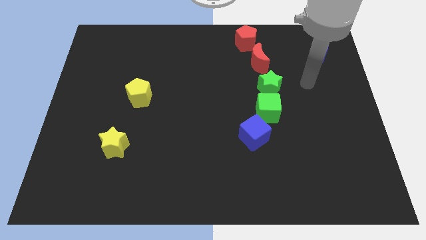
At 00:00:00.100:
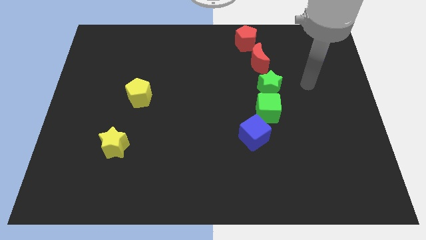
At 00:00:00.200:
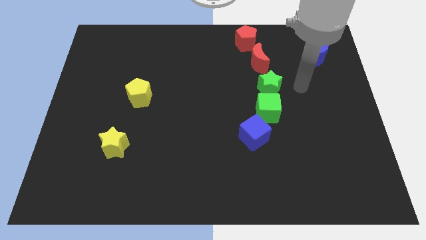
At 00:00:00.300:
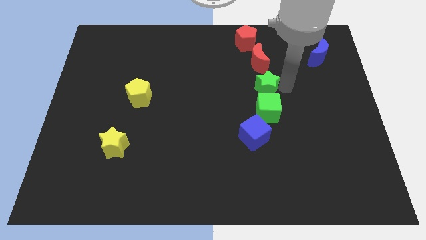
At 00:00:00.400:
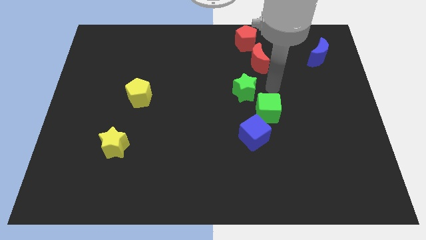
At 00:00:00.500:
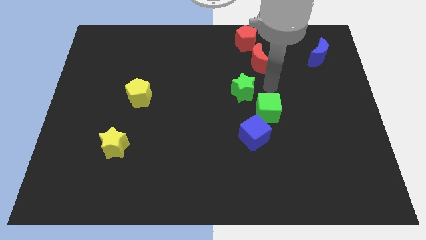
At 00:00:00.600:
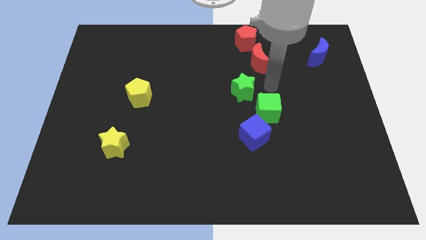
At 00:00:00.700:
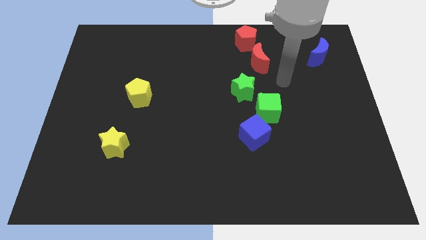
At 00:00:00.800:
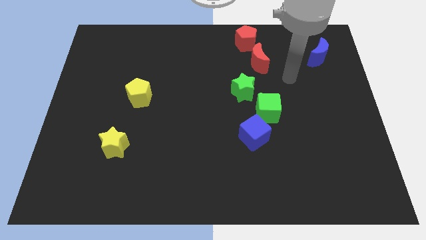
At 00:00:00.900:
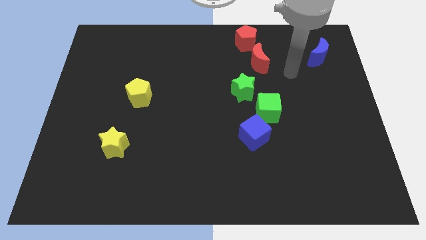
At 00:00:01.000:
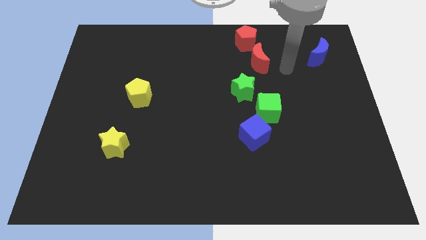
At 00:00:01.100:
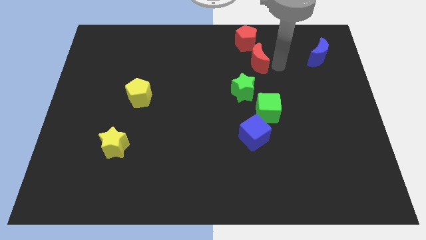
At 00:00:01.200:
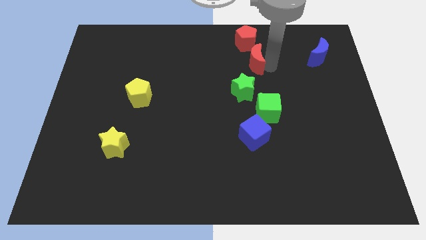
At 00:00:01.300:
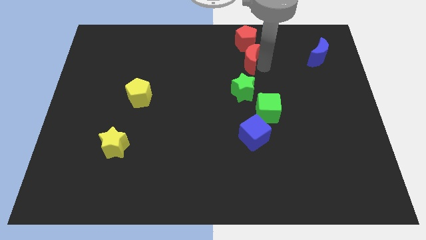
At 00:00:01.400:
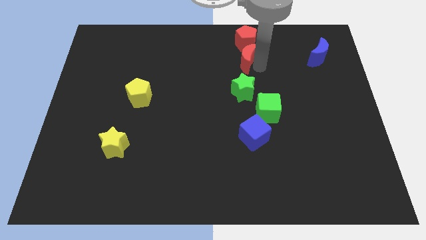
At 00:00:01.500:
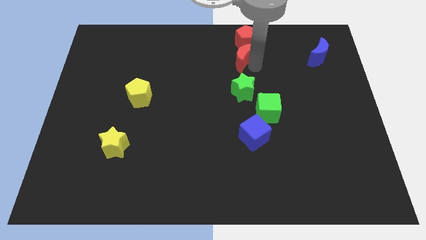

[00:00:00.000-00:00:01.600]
move green star and red moon vertical to each other

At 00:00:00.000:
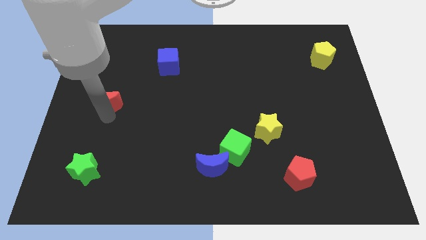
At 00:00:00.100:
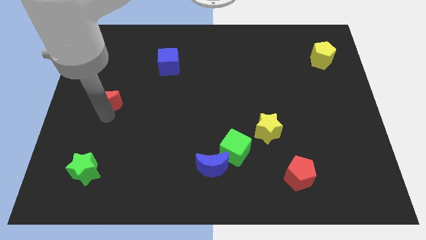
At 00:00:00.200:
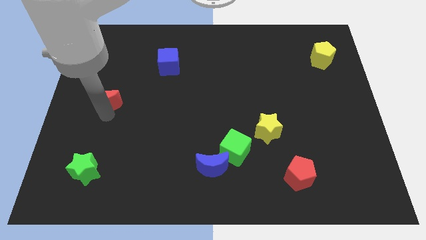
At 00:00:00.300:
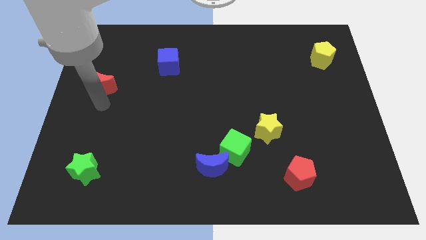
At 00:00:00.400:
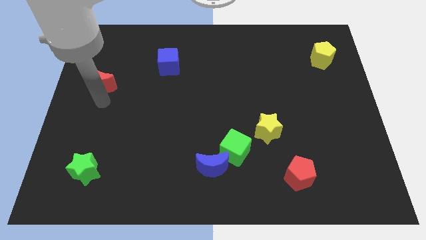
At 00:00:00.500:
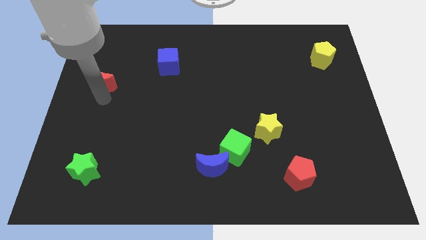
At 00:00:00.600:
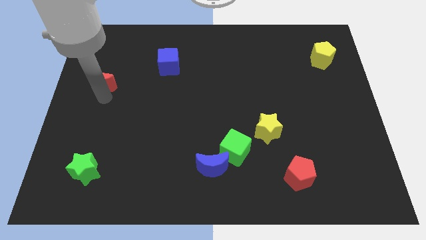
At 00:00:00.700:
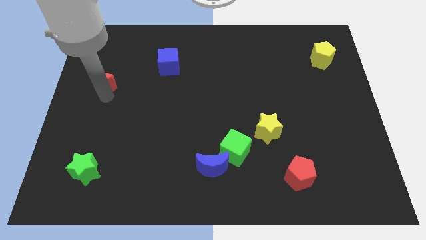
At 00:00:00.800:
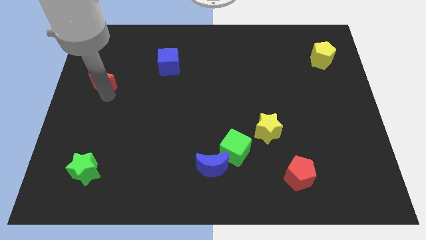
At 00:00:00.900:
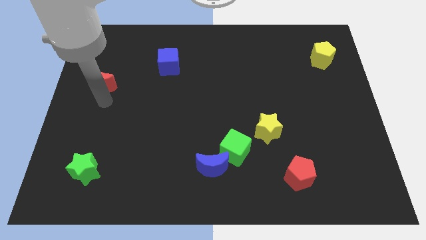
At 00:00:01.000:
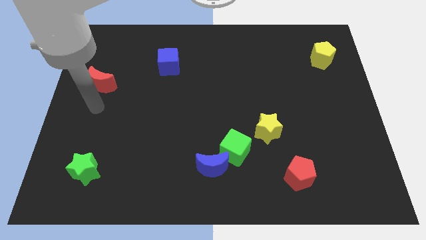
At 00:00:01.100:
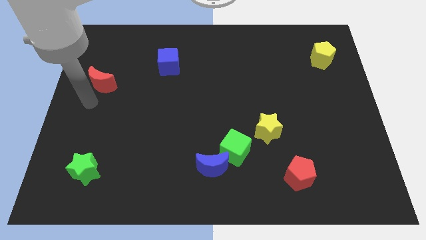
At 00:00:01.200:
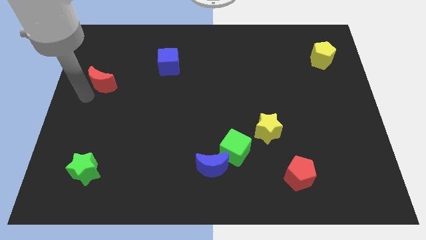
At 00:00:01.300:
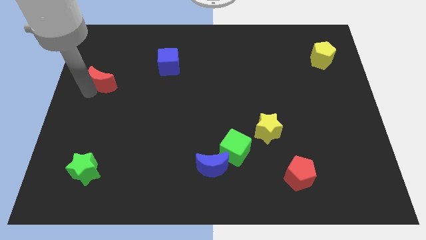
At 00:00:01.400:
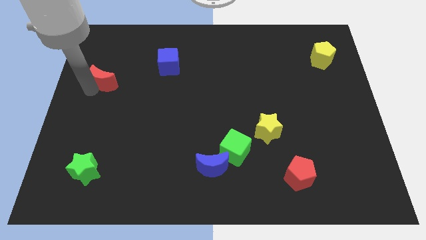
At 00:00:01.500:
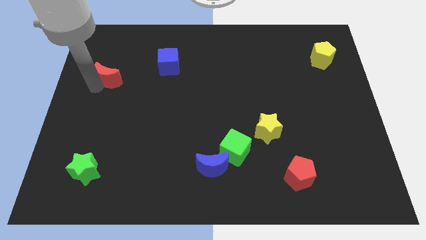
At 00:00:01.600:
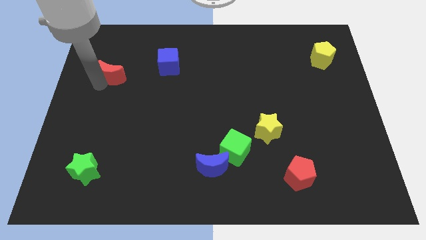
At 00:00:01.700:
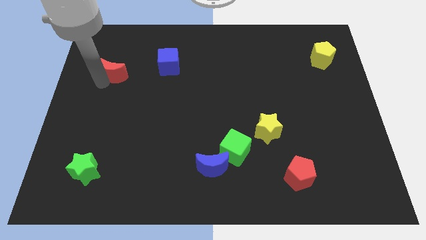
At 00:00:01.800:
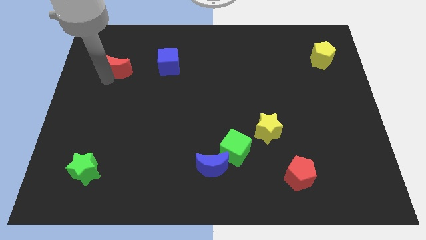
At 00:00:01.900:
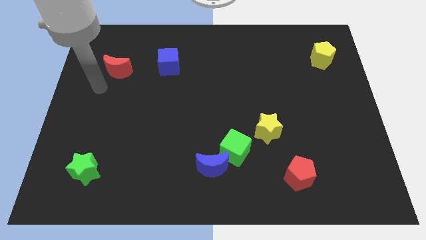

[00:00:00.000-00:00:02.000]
move the red crescent to the left of the blue cube

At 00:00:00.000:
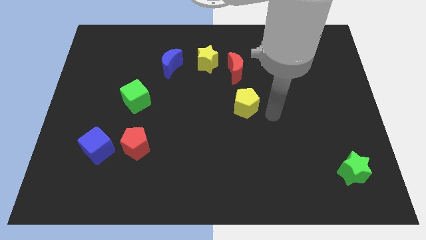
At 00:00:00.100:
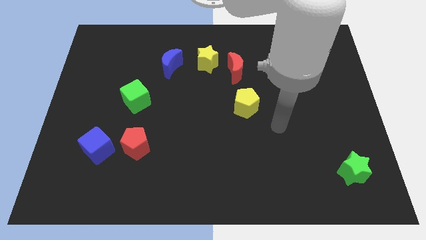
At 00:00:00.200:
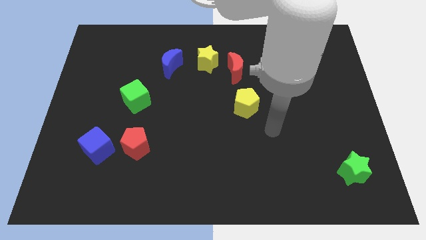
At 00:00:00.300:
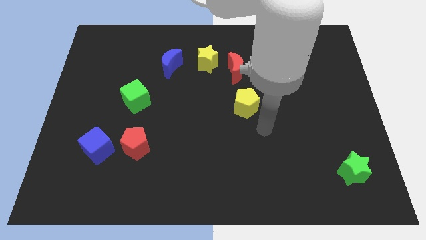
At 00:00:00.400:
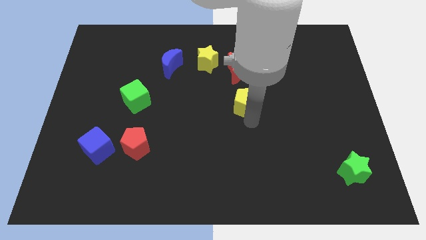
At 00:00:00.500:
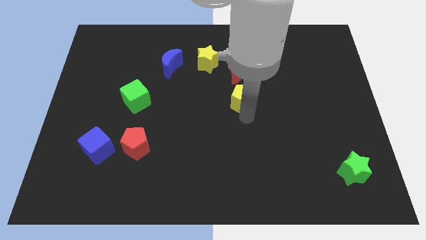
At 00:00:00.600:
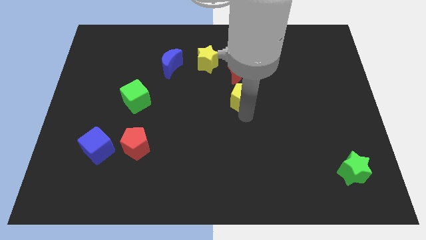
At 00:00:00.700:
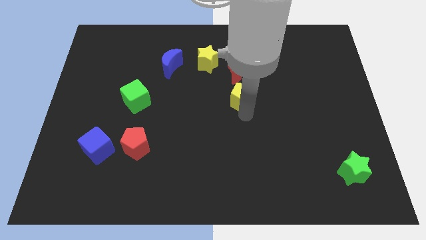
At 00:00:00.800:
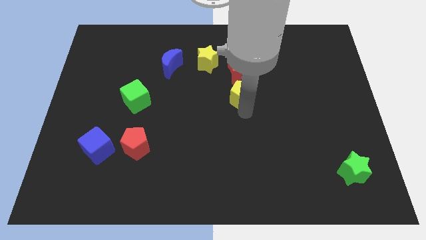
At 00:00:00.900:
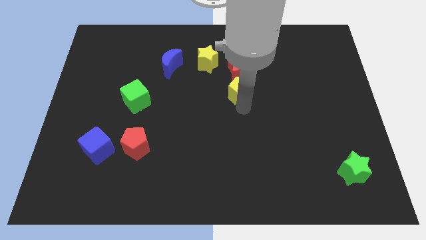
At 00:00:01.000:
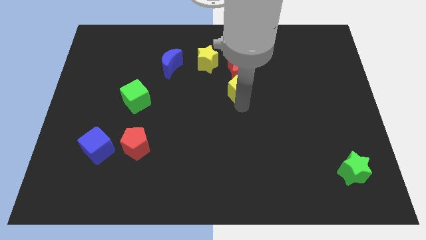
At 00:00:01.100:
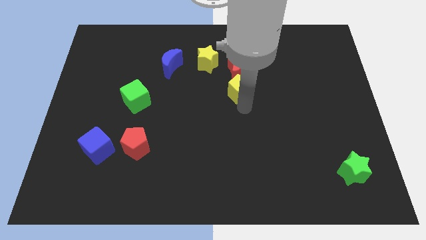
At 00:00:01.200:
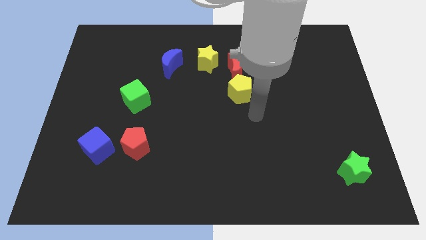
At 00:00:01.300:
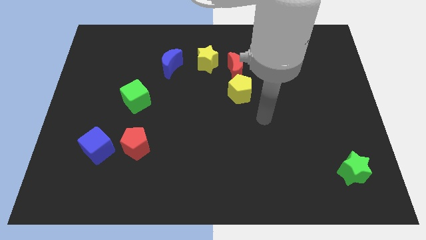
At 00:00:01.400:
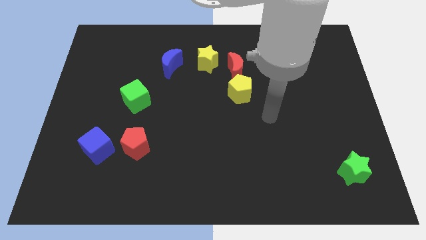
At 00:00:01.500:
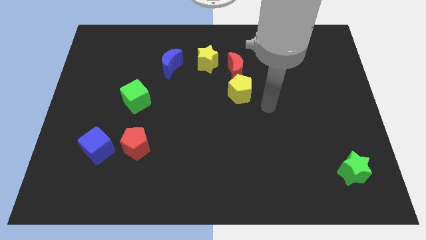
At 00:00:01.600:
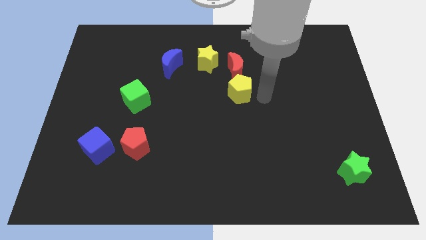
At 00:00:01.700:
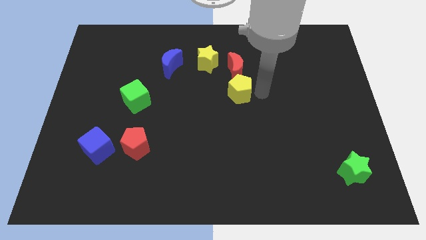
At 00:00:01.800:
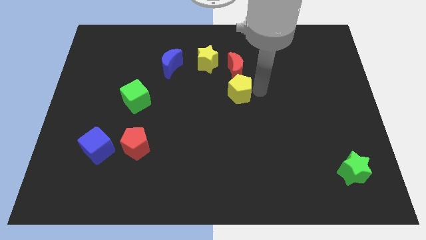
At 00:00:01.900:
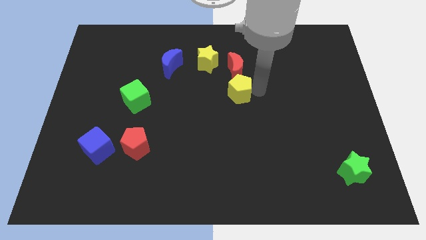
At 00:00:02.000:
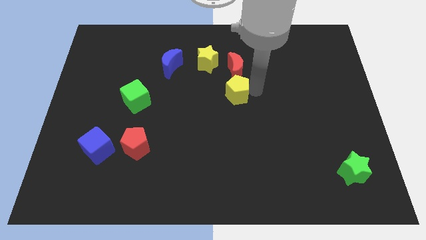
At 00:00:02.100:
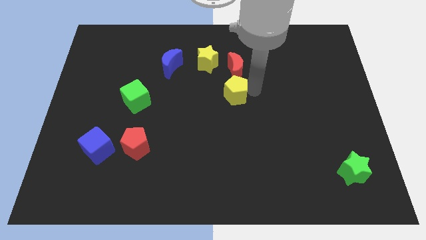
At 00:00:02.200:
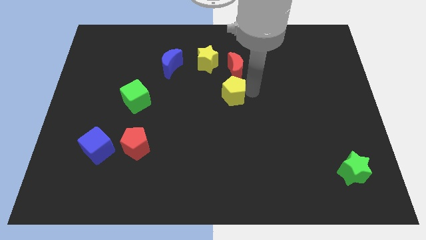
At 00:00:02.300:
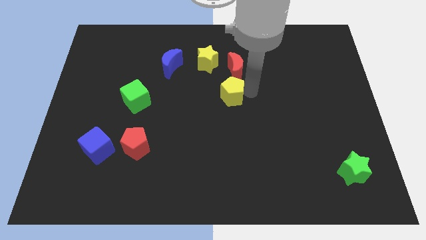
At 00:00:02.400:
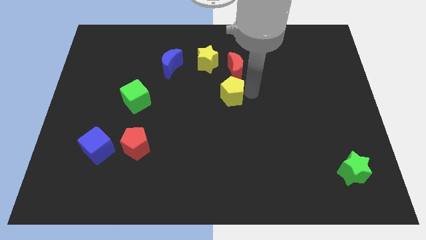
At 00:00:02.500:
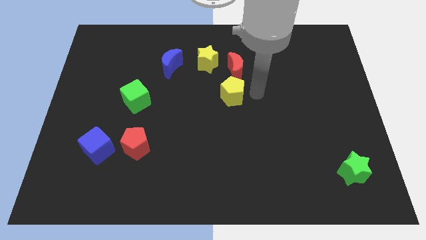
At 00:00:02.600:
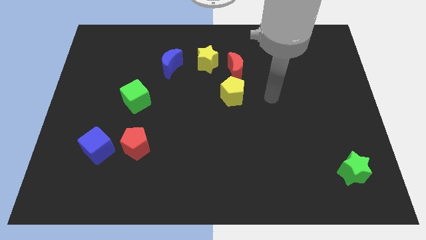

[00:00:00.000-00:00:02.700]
move the yellow pentagon below the red moon

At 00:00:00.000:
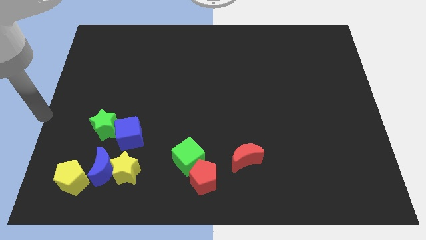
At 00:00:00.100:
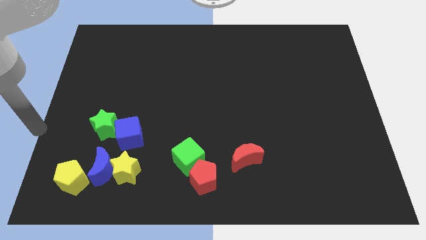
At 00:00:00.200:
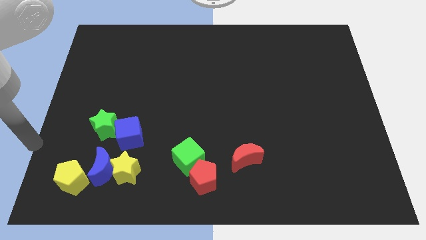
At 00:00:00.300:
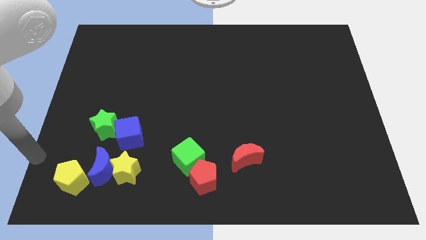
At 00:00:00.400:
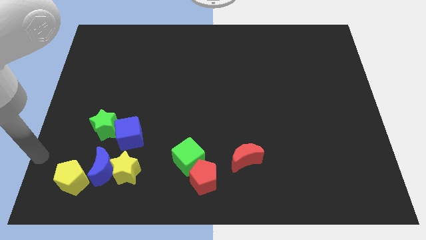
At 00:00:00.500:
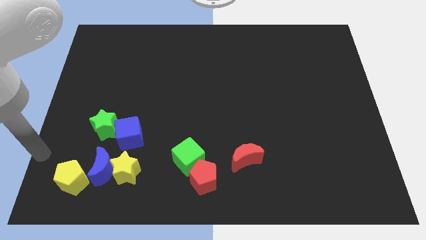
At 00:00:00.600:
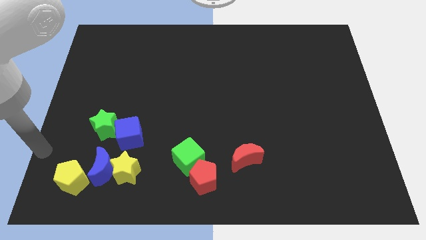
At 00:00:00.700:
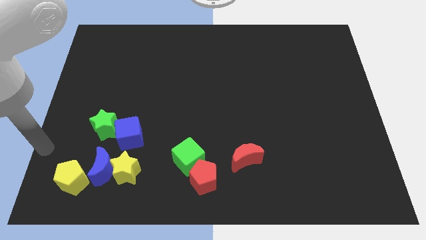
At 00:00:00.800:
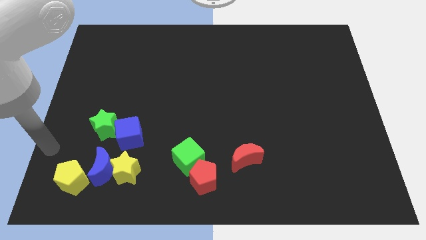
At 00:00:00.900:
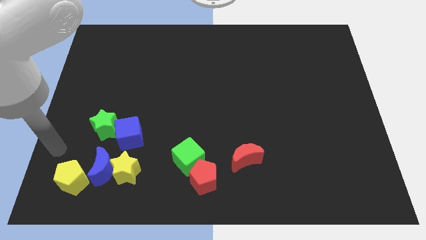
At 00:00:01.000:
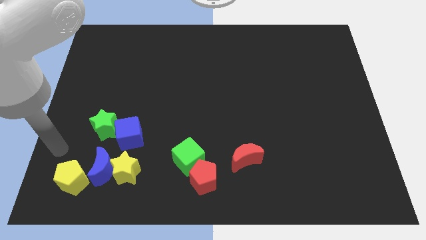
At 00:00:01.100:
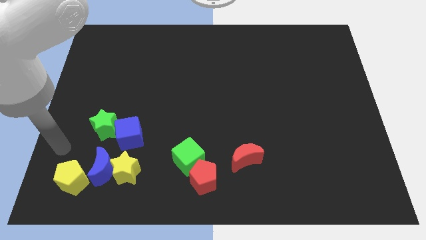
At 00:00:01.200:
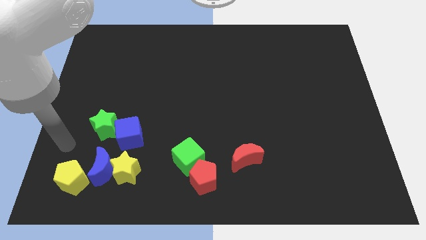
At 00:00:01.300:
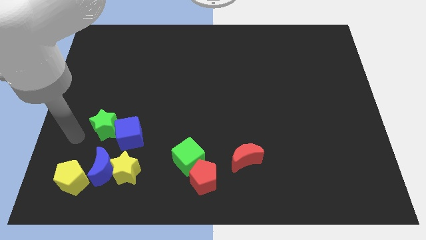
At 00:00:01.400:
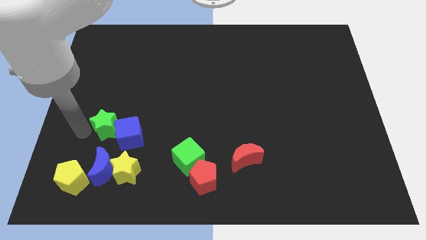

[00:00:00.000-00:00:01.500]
point your arm at the left side of the green star

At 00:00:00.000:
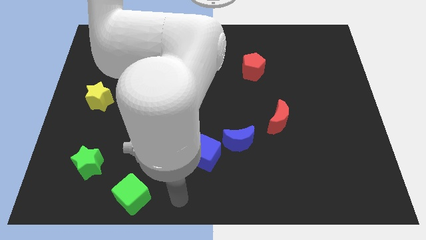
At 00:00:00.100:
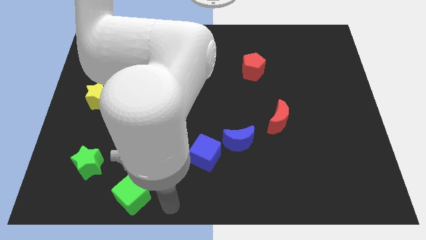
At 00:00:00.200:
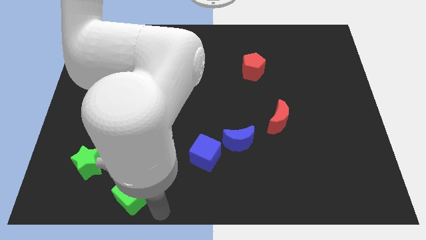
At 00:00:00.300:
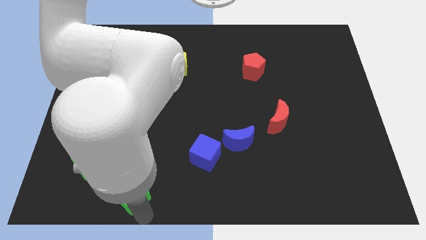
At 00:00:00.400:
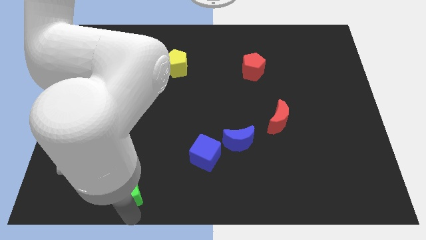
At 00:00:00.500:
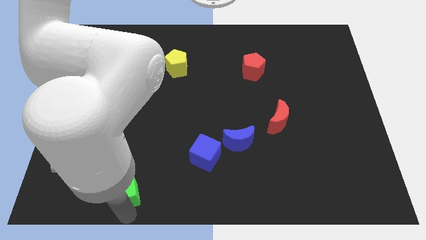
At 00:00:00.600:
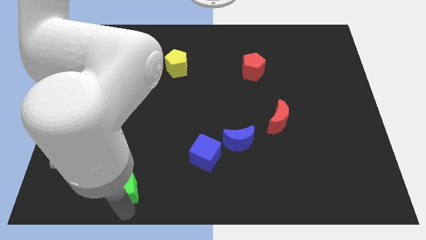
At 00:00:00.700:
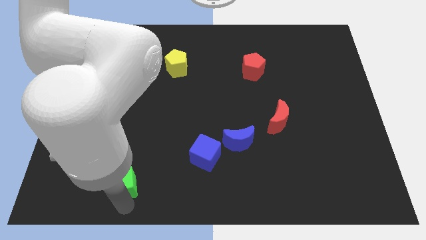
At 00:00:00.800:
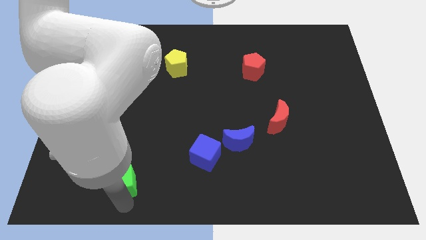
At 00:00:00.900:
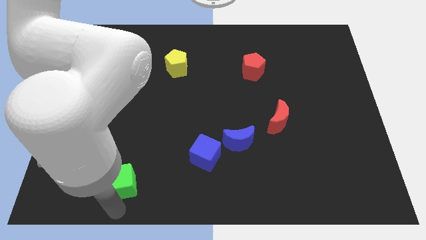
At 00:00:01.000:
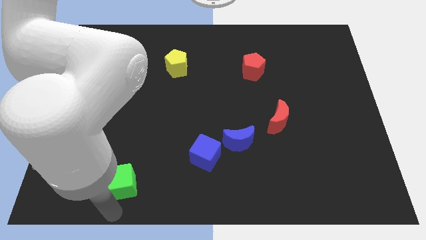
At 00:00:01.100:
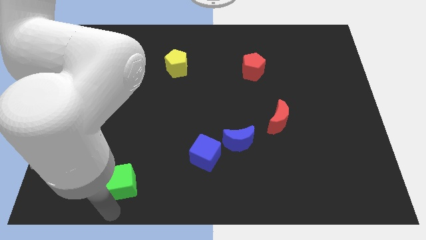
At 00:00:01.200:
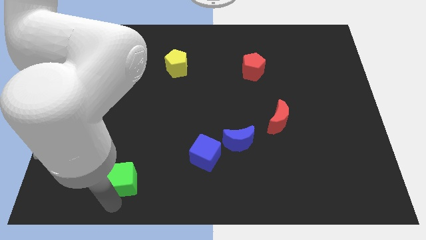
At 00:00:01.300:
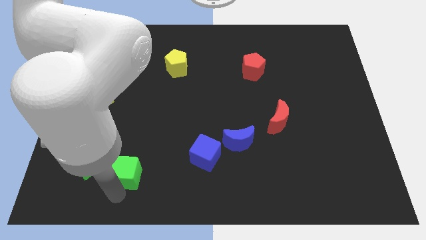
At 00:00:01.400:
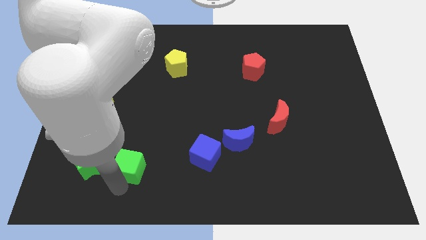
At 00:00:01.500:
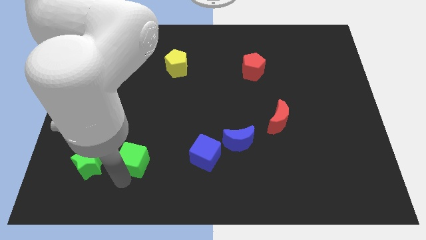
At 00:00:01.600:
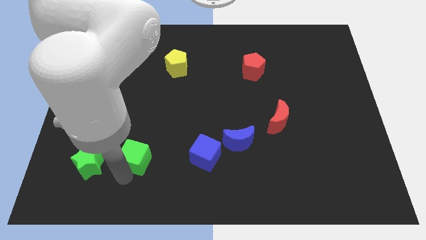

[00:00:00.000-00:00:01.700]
put the green cube parallel right to the green star
